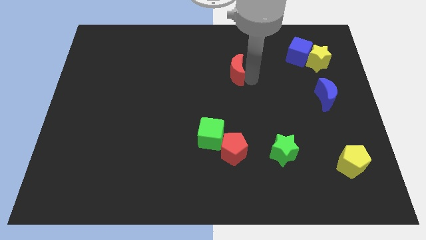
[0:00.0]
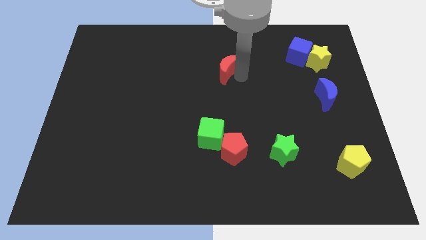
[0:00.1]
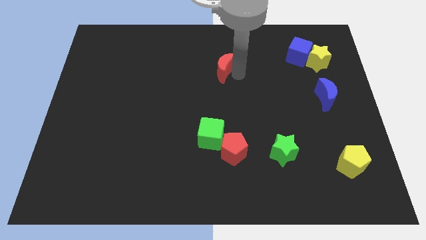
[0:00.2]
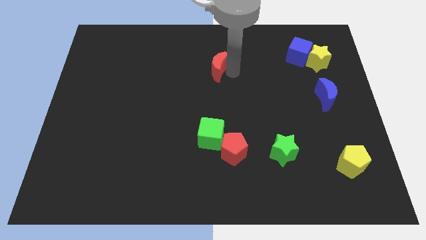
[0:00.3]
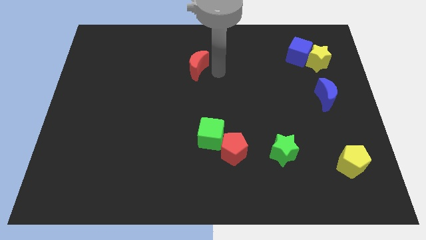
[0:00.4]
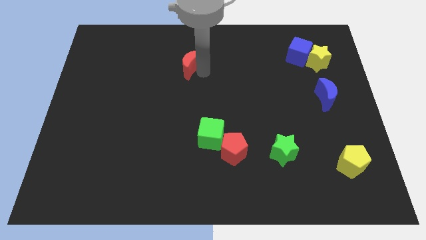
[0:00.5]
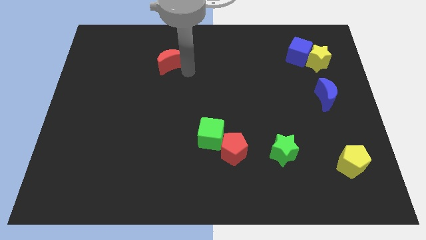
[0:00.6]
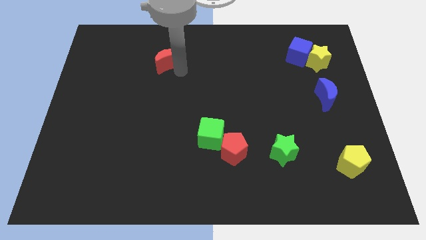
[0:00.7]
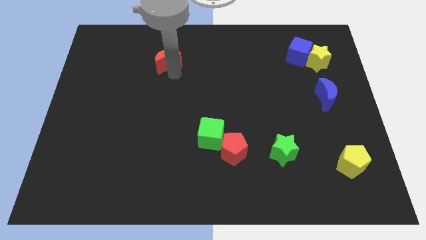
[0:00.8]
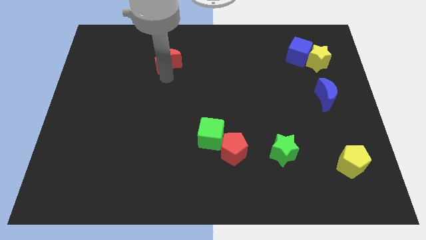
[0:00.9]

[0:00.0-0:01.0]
move red crescent slightly upwards

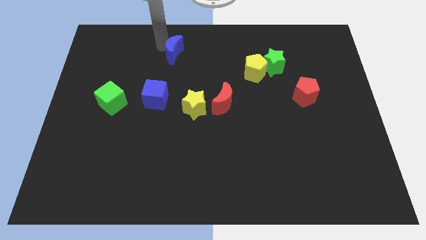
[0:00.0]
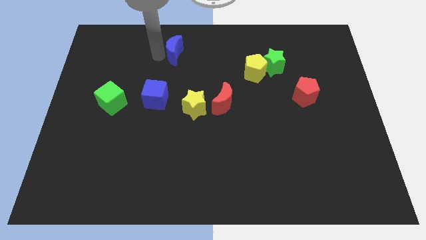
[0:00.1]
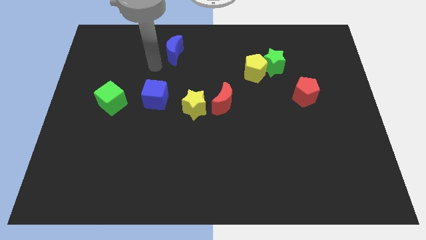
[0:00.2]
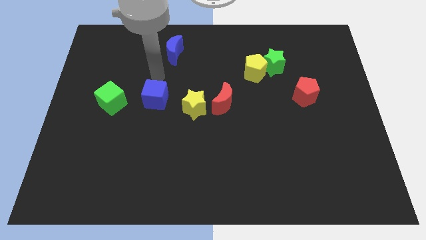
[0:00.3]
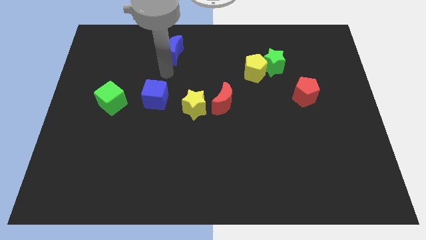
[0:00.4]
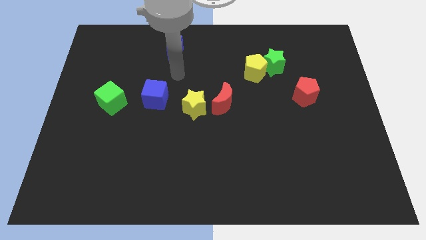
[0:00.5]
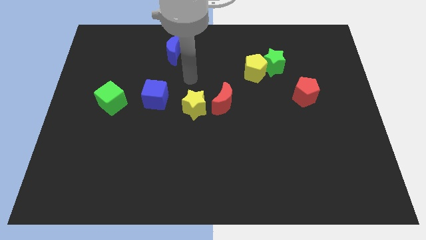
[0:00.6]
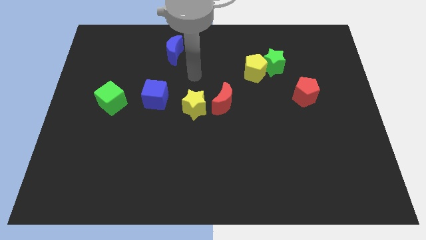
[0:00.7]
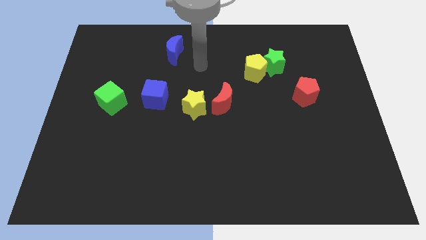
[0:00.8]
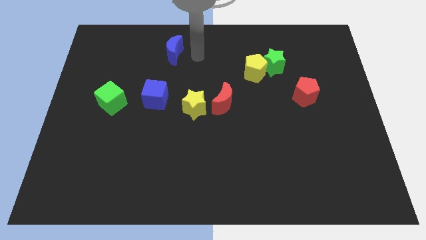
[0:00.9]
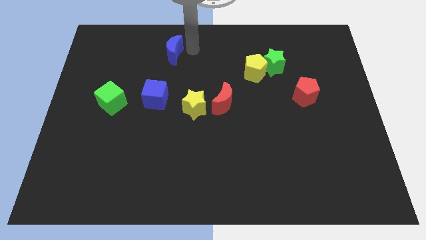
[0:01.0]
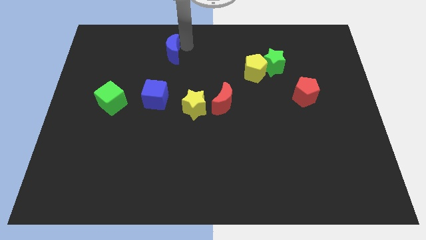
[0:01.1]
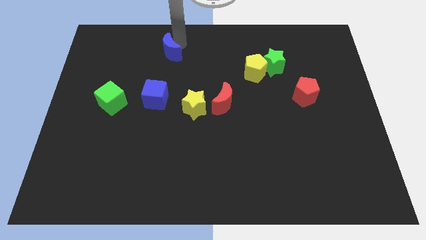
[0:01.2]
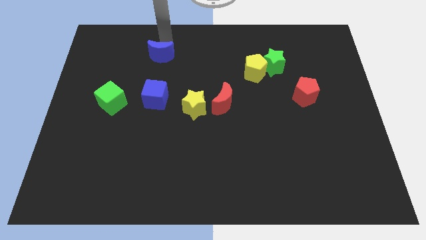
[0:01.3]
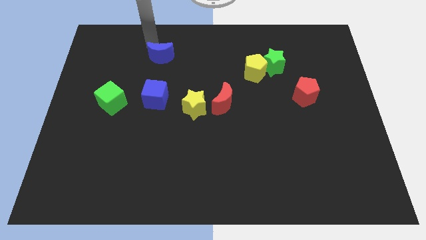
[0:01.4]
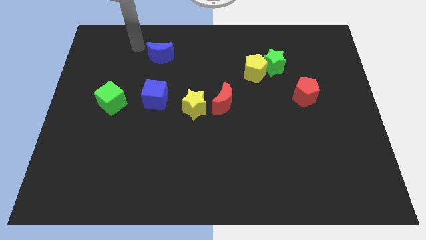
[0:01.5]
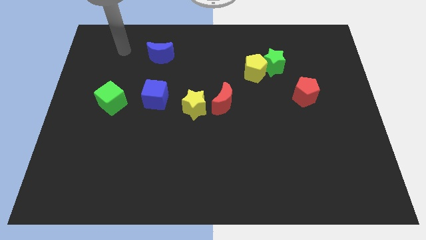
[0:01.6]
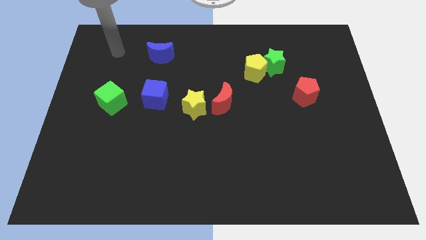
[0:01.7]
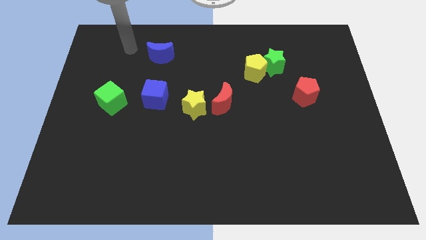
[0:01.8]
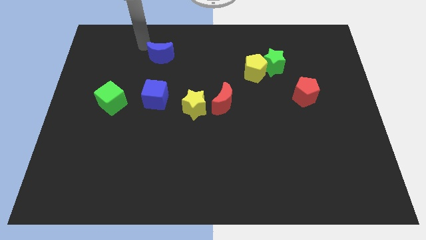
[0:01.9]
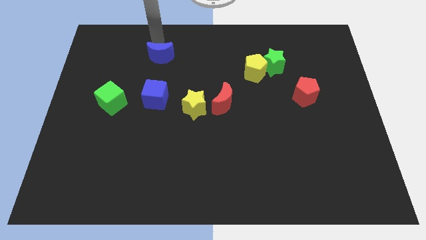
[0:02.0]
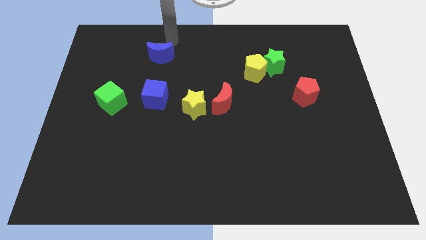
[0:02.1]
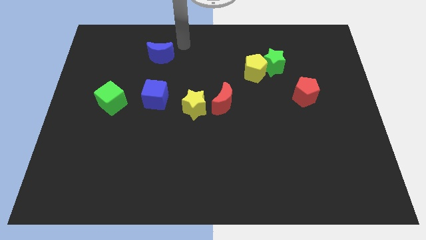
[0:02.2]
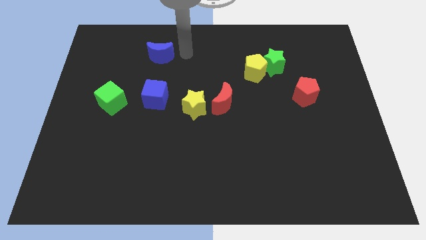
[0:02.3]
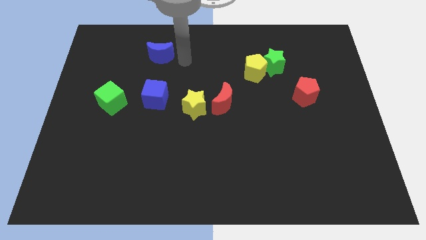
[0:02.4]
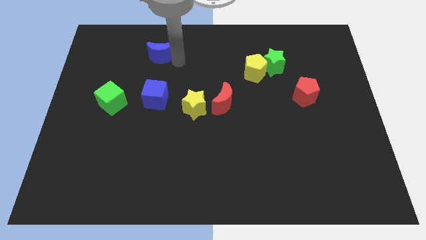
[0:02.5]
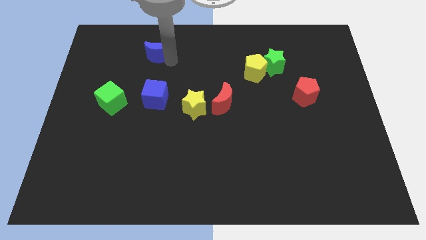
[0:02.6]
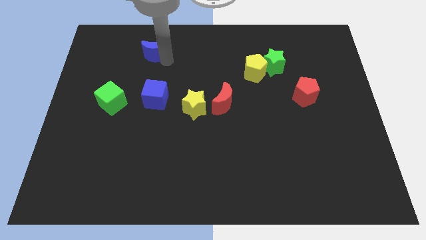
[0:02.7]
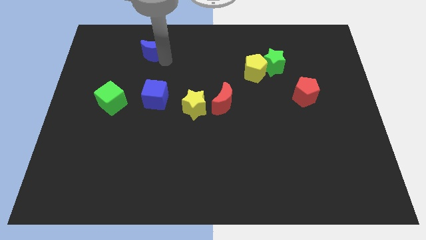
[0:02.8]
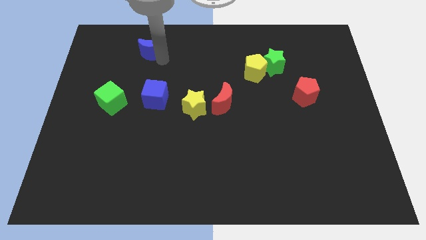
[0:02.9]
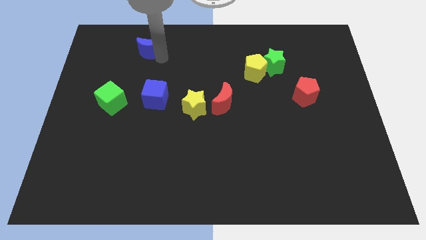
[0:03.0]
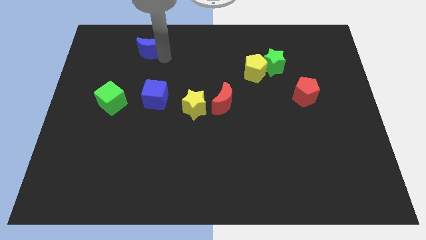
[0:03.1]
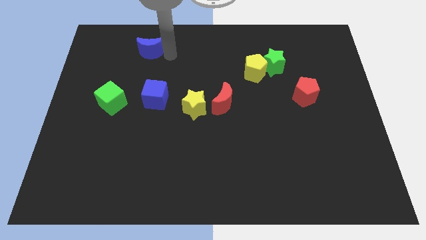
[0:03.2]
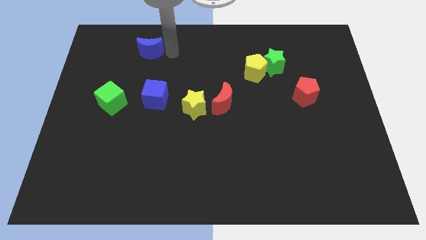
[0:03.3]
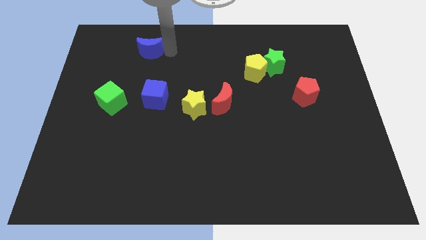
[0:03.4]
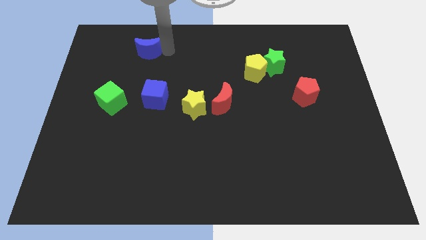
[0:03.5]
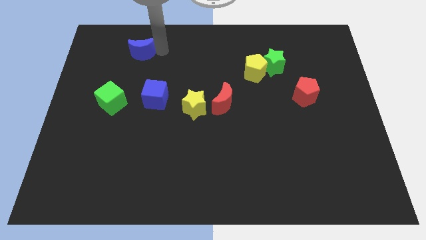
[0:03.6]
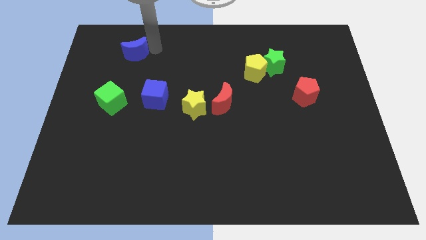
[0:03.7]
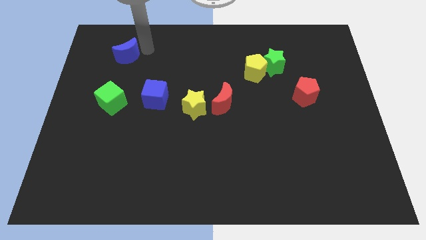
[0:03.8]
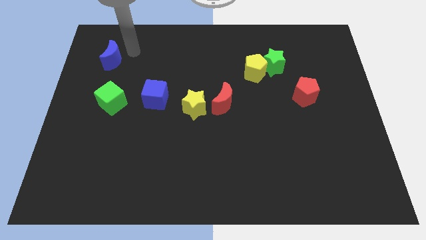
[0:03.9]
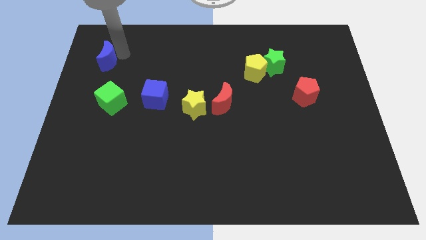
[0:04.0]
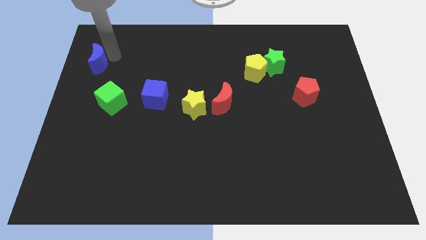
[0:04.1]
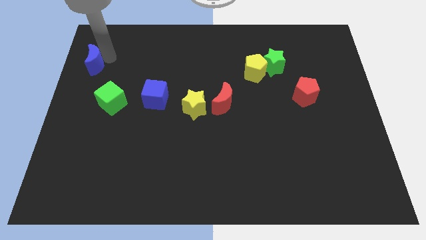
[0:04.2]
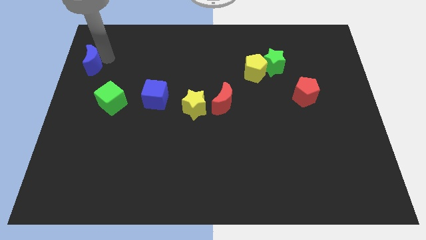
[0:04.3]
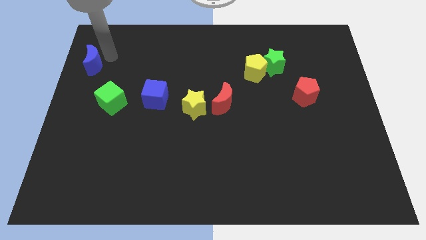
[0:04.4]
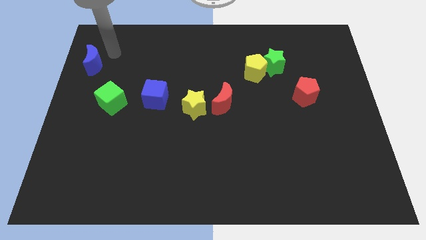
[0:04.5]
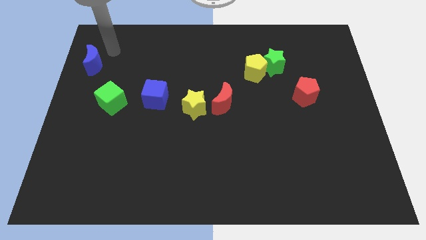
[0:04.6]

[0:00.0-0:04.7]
slide the blue moon diagonally top left to the gree cube

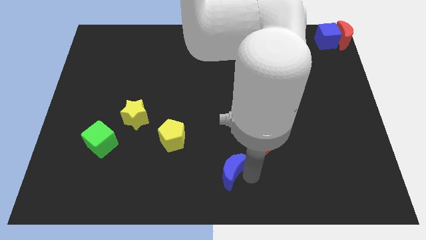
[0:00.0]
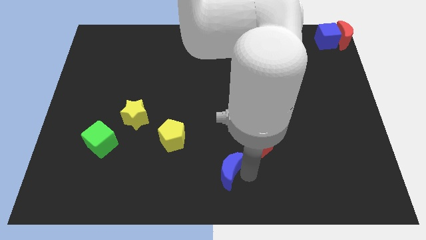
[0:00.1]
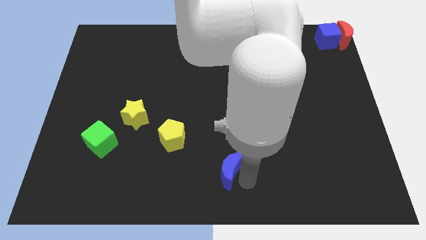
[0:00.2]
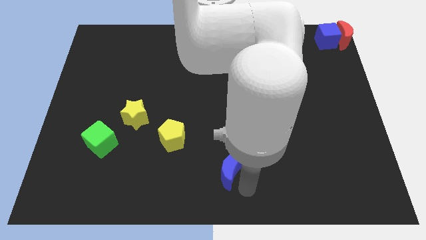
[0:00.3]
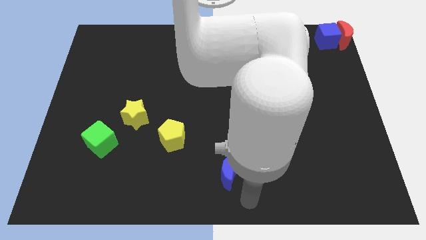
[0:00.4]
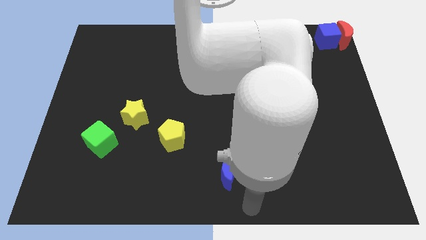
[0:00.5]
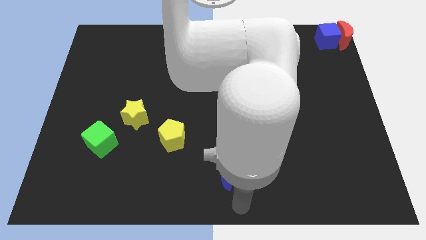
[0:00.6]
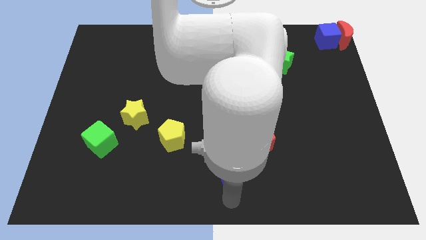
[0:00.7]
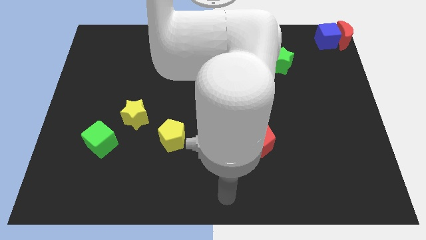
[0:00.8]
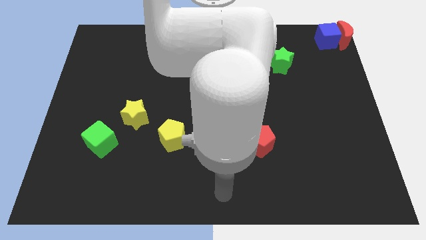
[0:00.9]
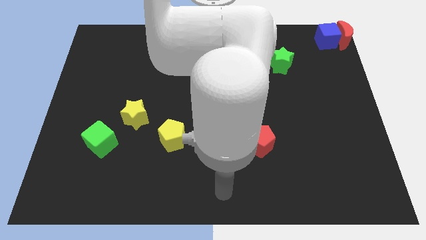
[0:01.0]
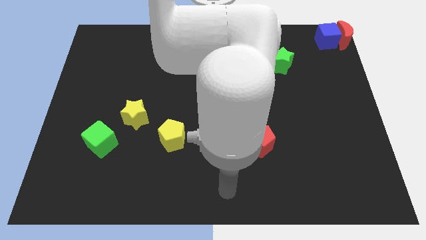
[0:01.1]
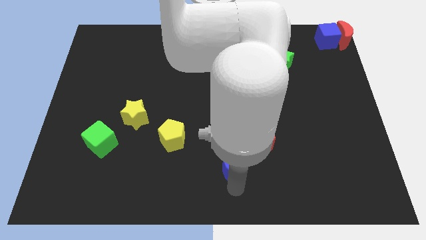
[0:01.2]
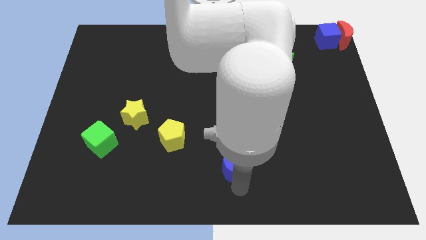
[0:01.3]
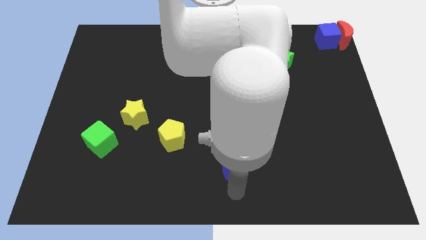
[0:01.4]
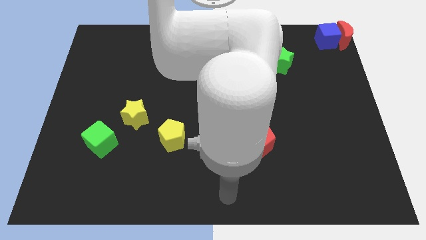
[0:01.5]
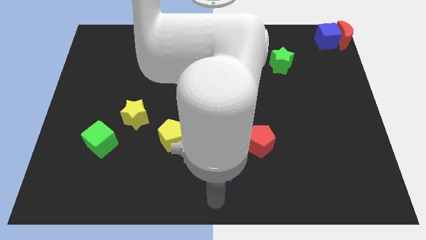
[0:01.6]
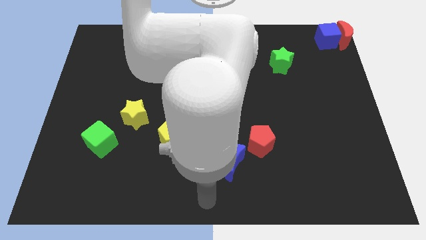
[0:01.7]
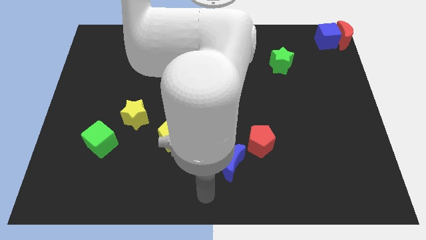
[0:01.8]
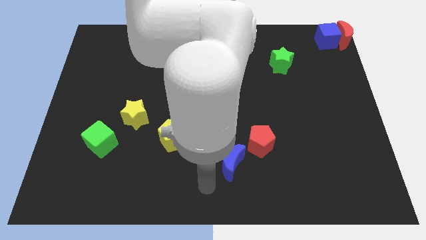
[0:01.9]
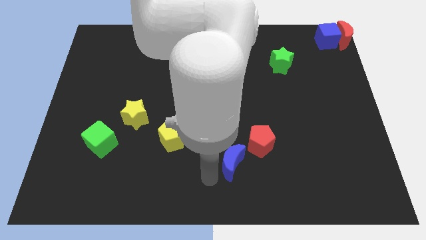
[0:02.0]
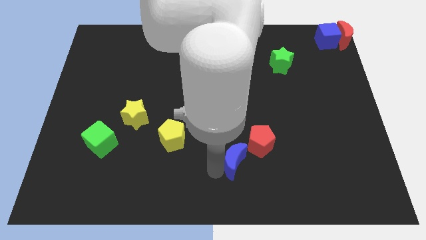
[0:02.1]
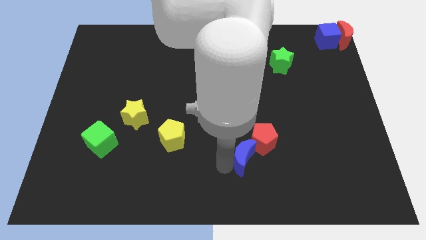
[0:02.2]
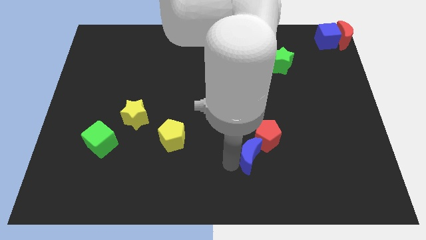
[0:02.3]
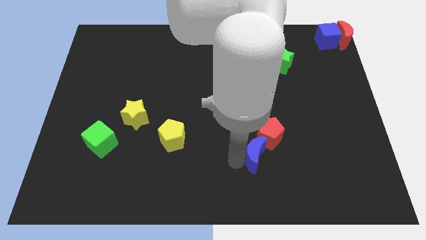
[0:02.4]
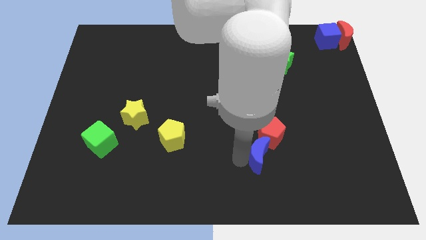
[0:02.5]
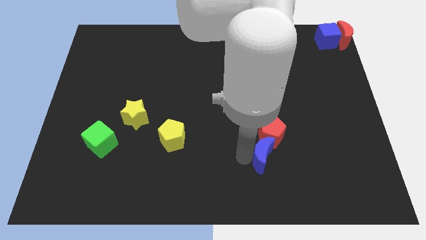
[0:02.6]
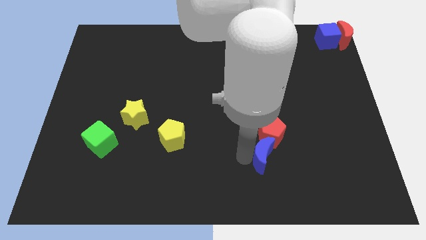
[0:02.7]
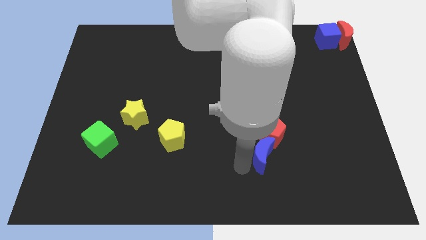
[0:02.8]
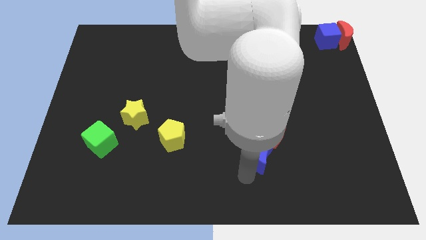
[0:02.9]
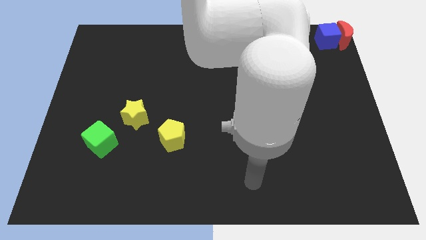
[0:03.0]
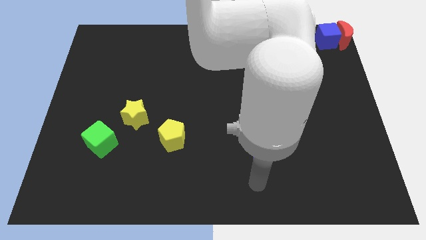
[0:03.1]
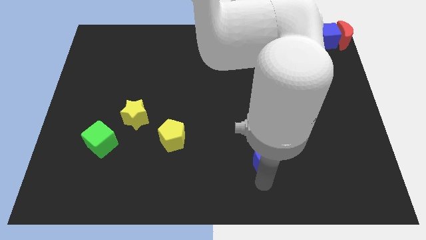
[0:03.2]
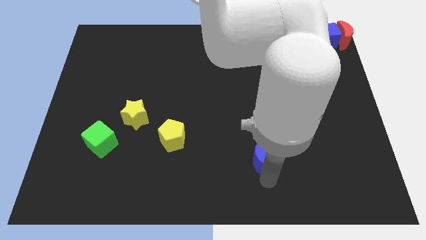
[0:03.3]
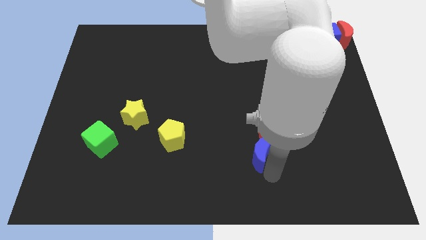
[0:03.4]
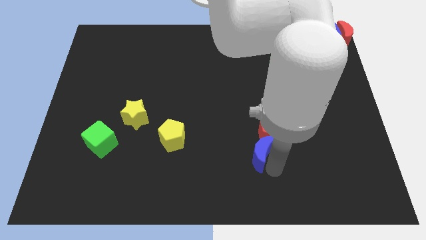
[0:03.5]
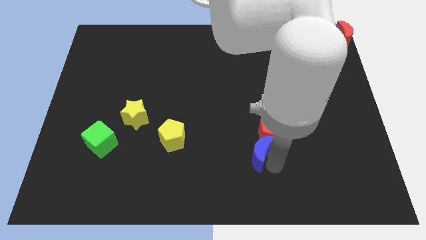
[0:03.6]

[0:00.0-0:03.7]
put the blue moon at the bottom of the red pentagon
